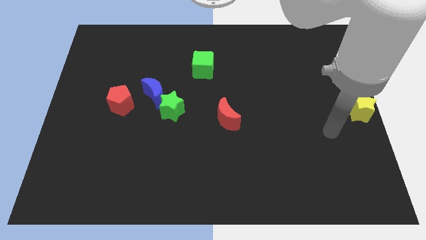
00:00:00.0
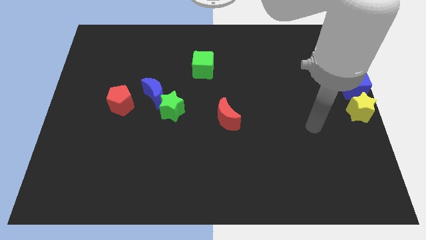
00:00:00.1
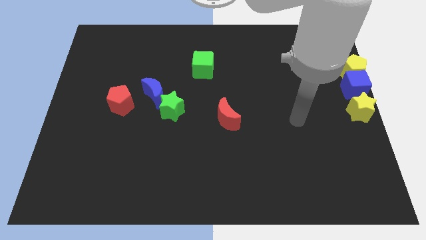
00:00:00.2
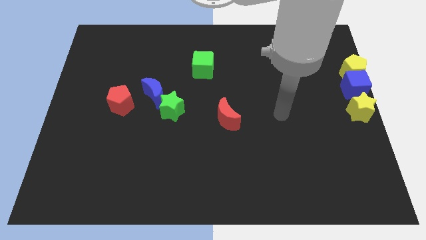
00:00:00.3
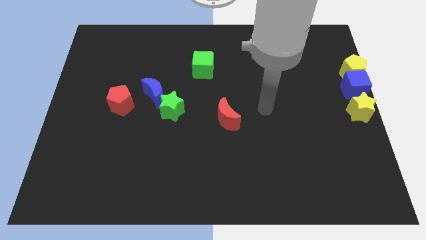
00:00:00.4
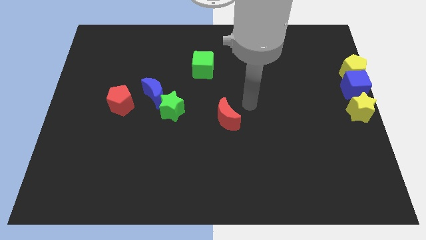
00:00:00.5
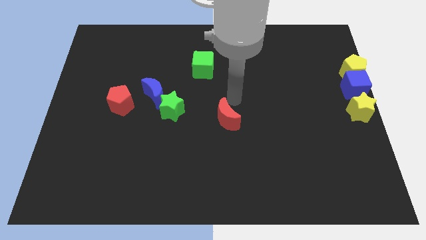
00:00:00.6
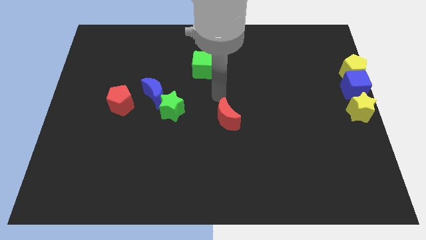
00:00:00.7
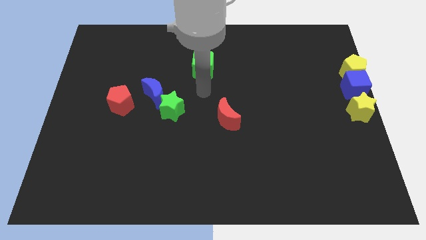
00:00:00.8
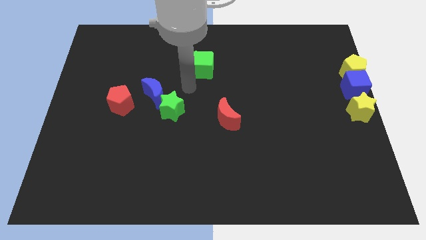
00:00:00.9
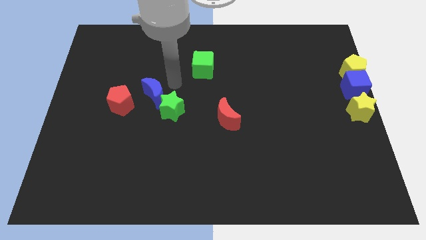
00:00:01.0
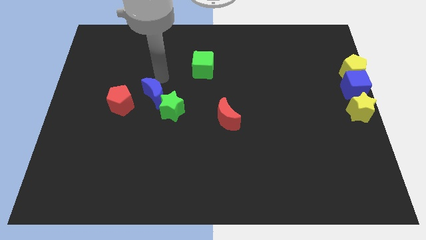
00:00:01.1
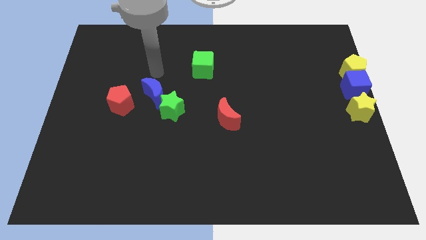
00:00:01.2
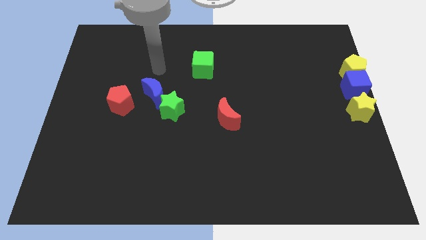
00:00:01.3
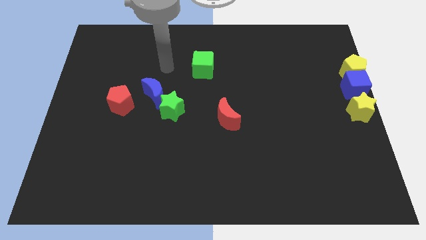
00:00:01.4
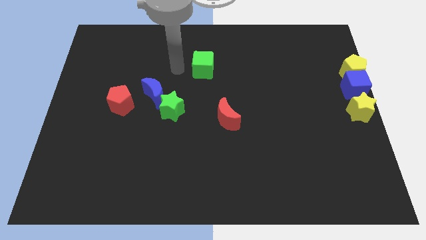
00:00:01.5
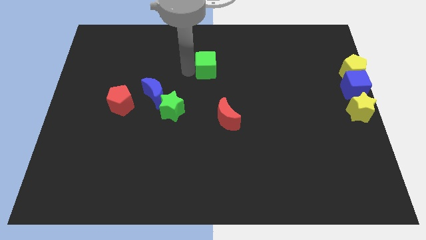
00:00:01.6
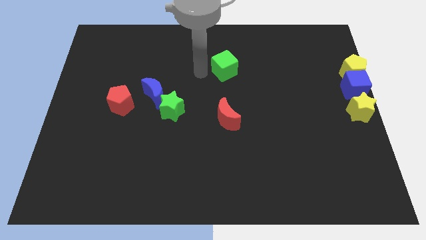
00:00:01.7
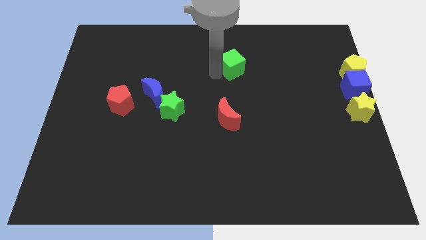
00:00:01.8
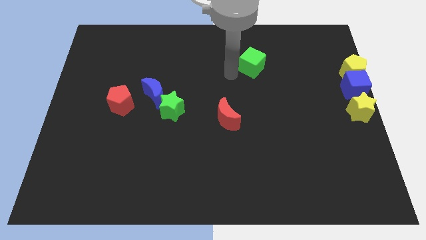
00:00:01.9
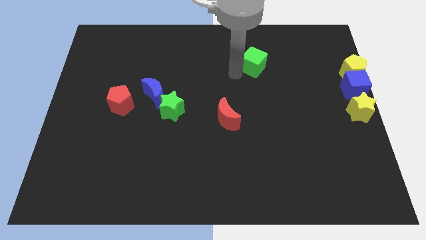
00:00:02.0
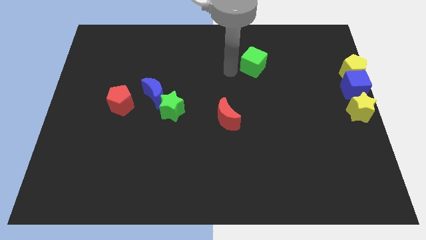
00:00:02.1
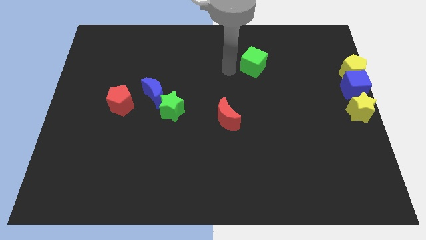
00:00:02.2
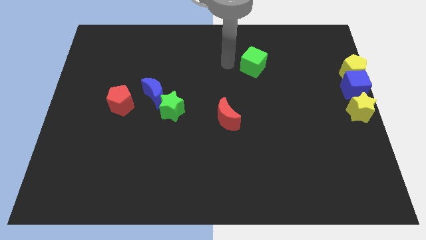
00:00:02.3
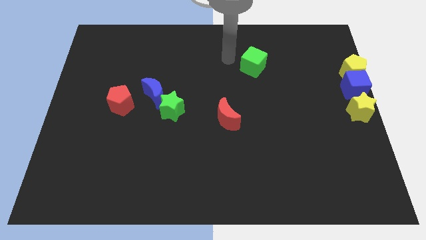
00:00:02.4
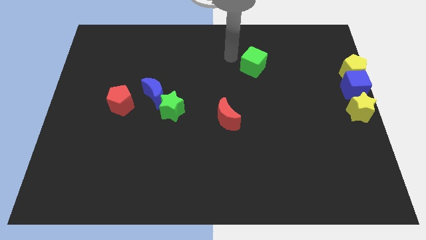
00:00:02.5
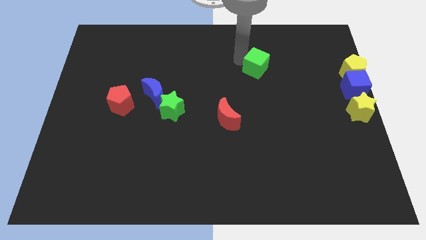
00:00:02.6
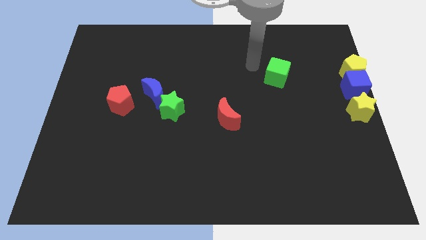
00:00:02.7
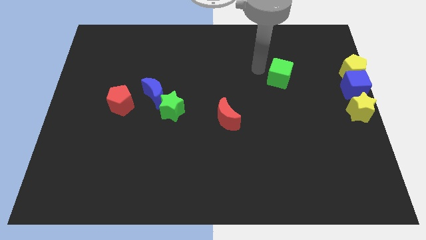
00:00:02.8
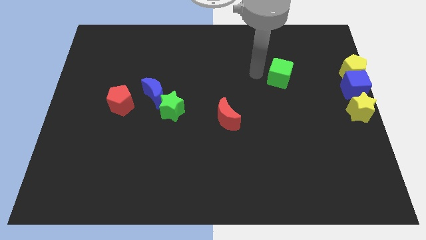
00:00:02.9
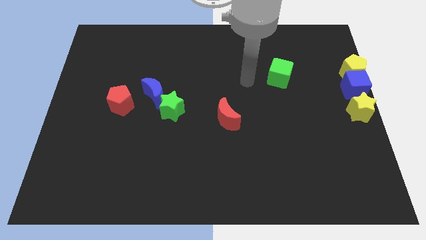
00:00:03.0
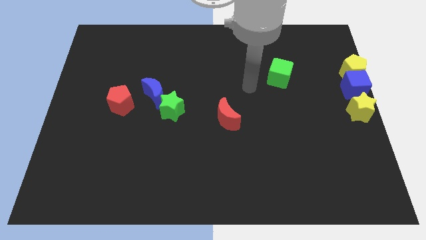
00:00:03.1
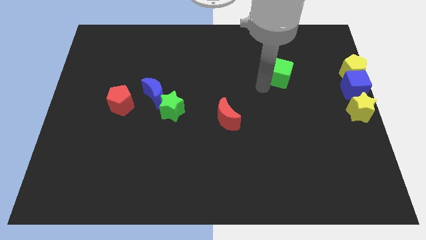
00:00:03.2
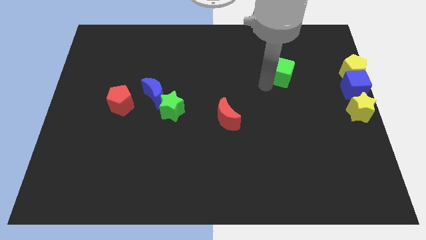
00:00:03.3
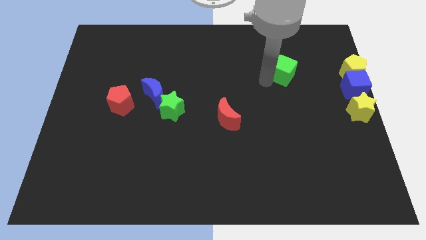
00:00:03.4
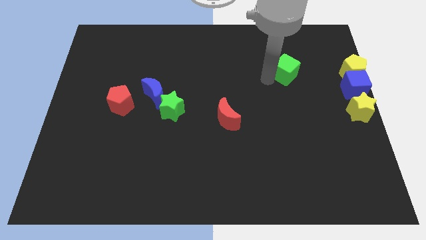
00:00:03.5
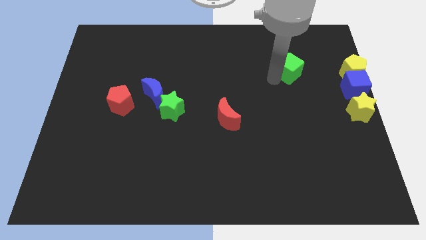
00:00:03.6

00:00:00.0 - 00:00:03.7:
push the green star to the right of the board

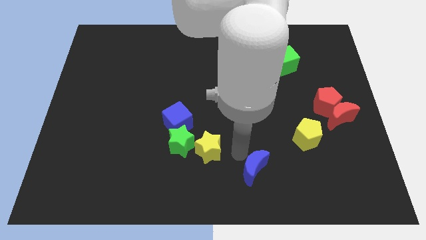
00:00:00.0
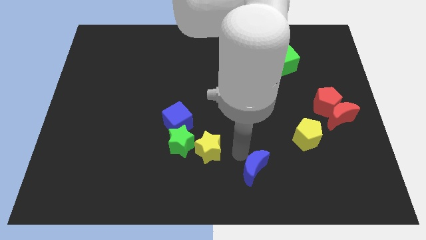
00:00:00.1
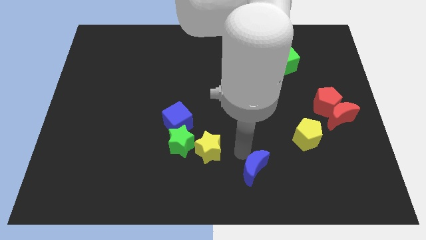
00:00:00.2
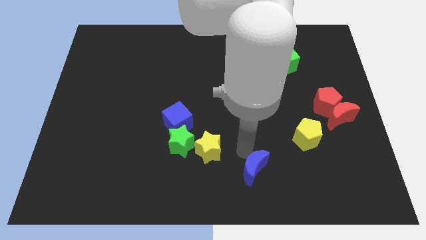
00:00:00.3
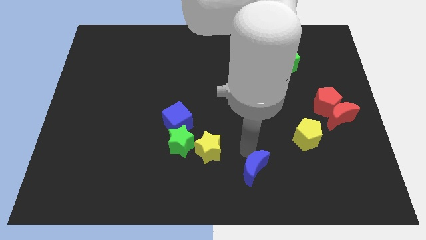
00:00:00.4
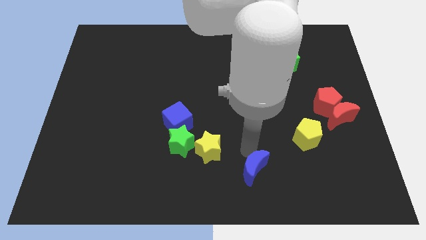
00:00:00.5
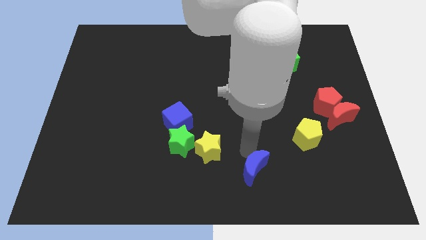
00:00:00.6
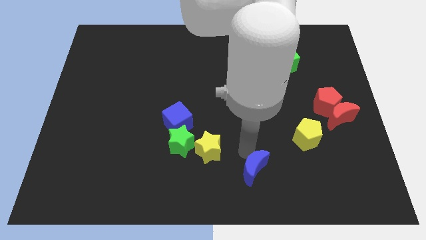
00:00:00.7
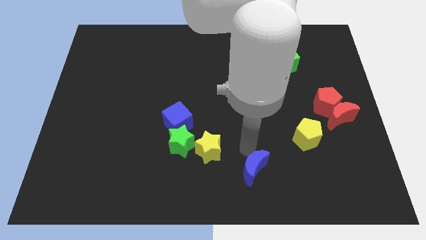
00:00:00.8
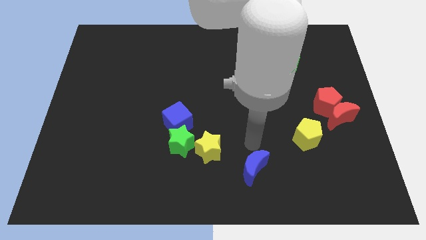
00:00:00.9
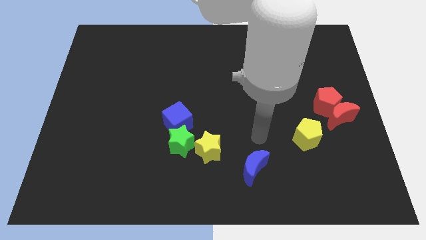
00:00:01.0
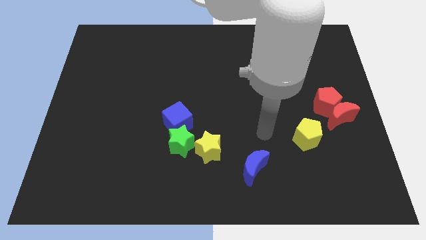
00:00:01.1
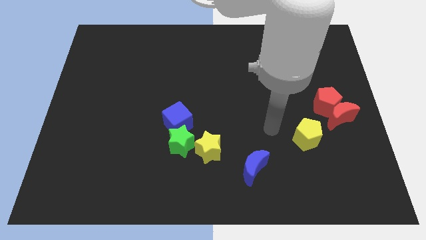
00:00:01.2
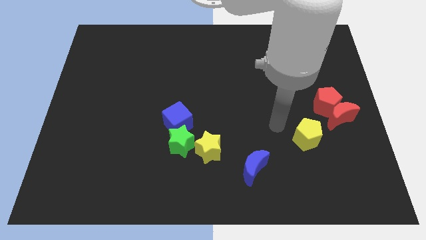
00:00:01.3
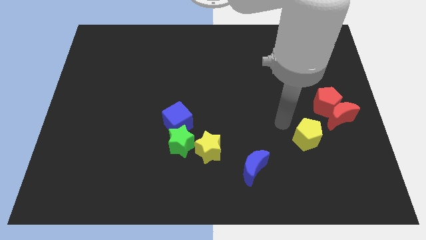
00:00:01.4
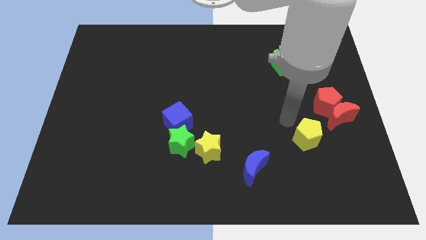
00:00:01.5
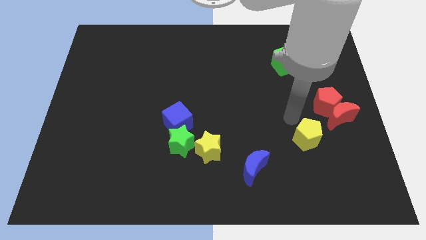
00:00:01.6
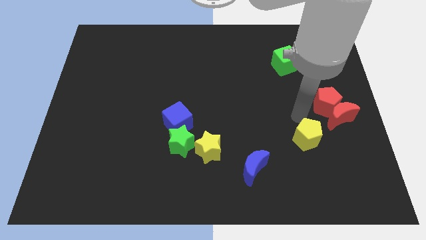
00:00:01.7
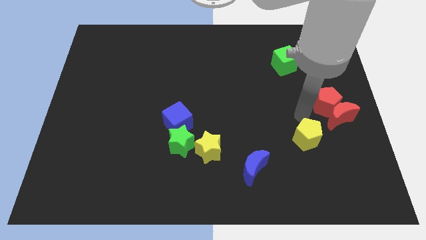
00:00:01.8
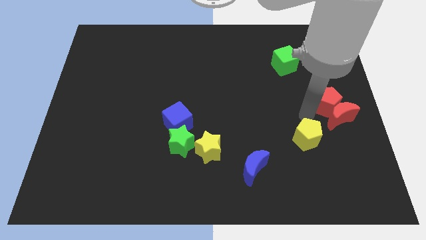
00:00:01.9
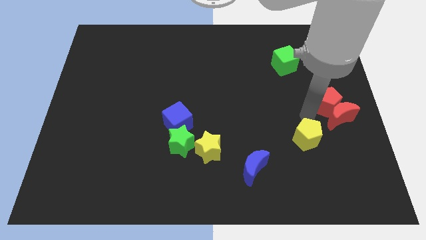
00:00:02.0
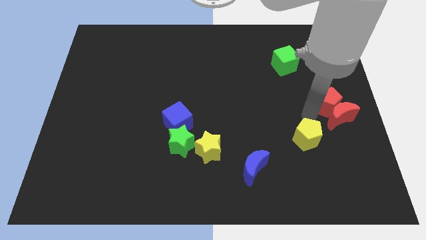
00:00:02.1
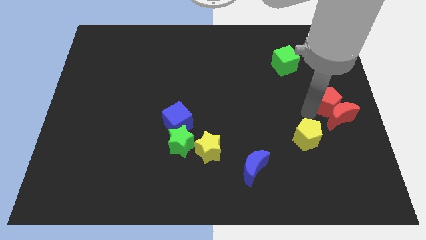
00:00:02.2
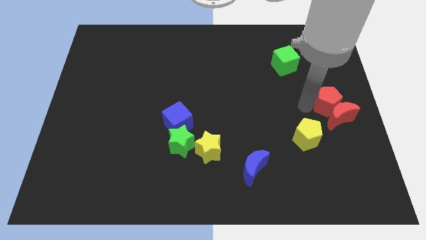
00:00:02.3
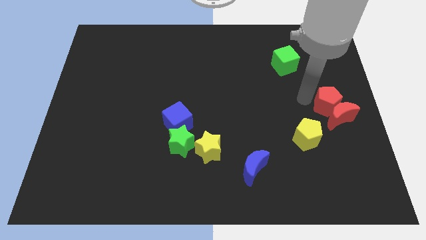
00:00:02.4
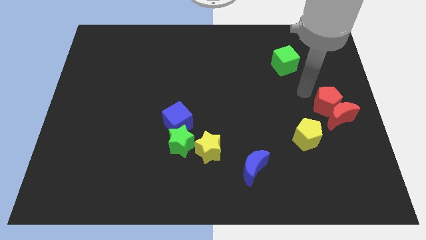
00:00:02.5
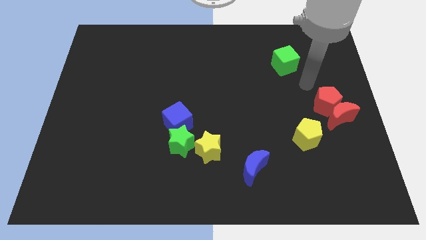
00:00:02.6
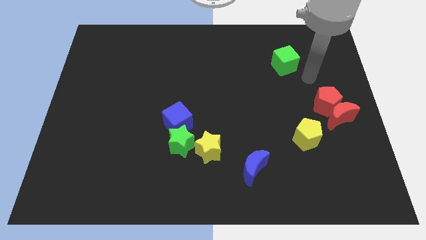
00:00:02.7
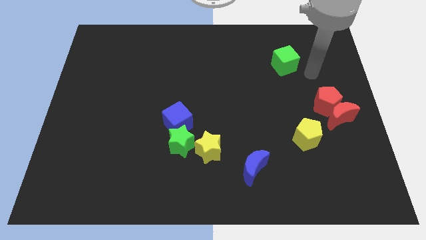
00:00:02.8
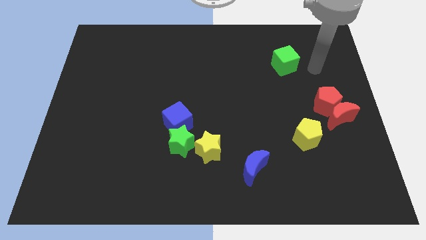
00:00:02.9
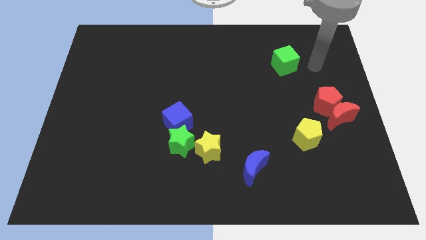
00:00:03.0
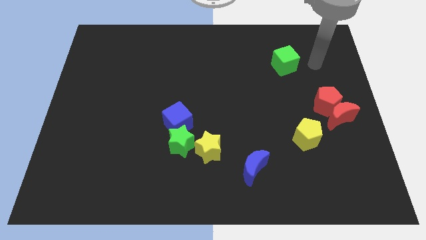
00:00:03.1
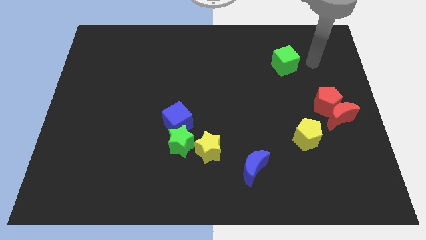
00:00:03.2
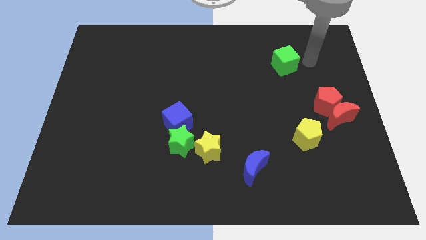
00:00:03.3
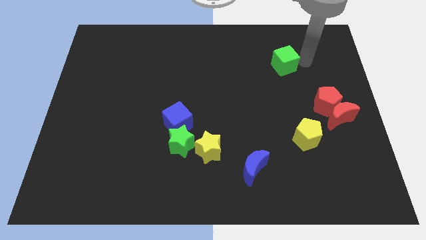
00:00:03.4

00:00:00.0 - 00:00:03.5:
move your arm to the top right of the board

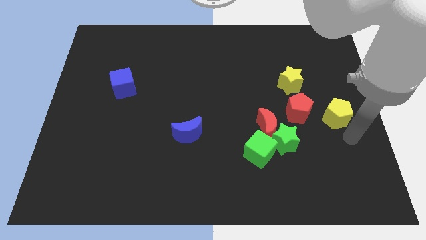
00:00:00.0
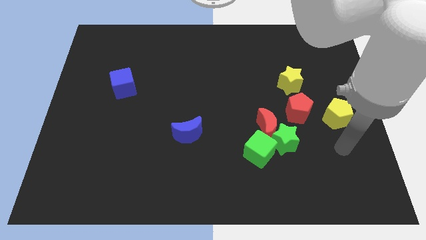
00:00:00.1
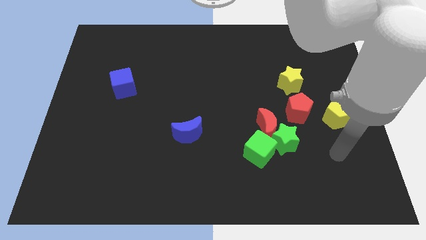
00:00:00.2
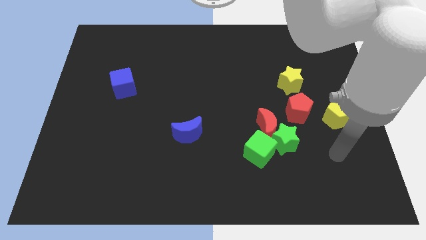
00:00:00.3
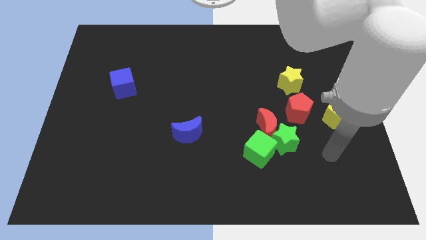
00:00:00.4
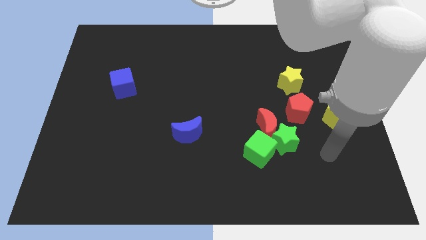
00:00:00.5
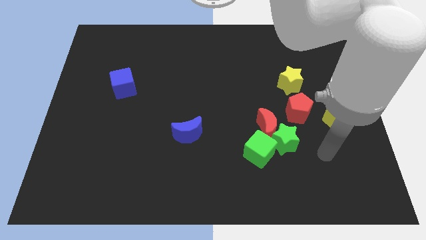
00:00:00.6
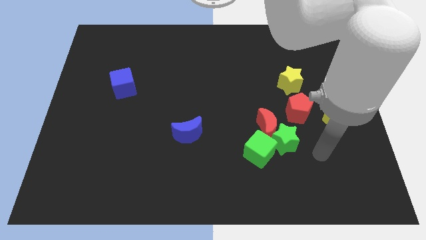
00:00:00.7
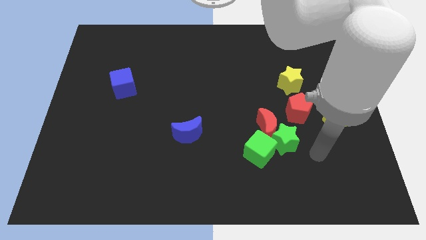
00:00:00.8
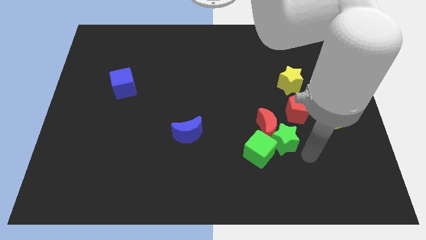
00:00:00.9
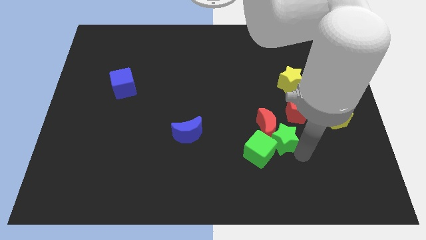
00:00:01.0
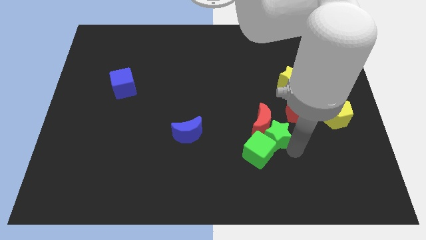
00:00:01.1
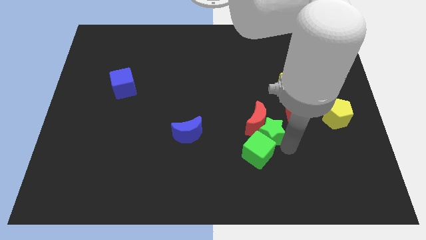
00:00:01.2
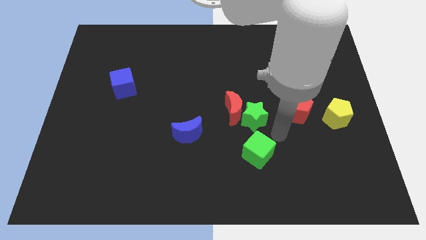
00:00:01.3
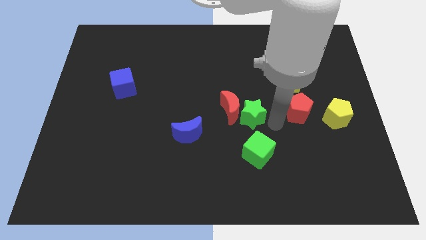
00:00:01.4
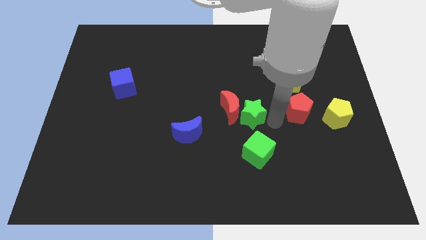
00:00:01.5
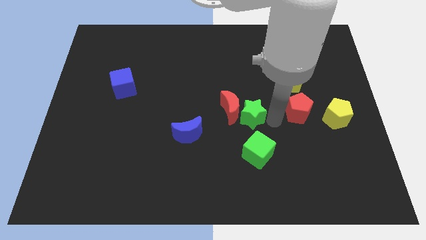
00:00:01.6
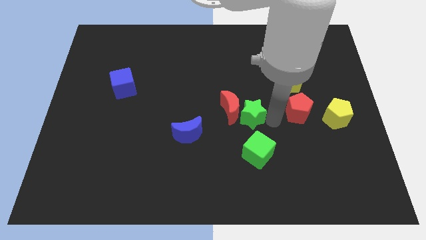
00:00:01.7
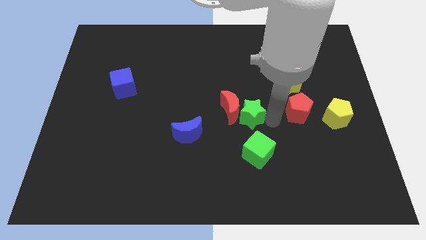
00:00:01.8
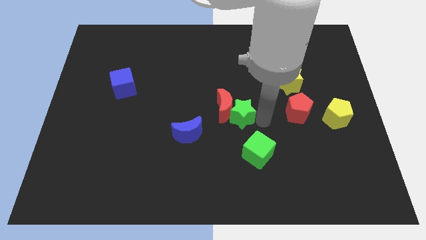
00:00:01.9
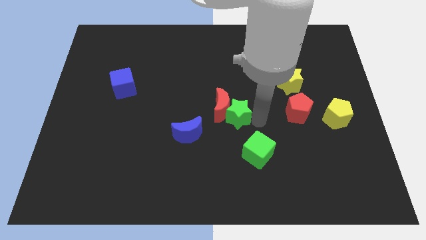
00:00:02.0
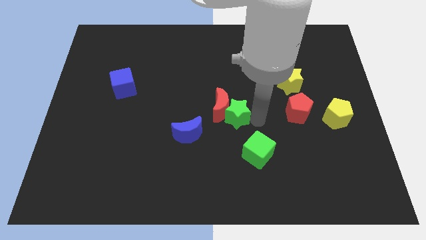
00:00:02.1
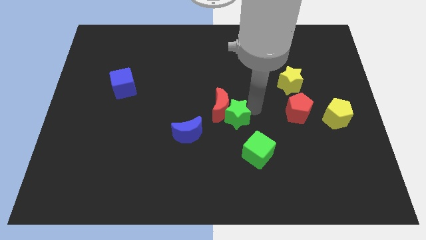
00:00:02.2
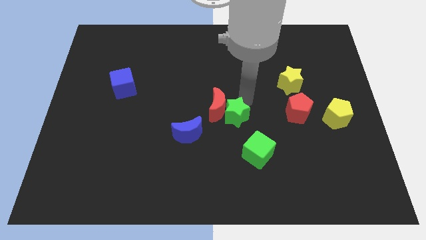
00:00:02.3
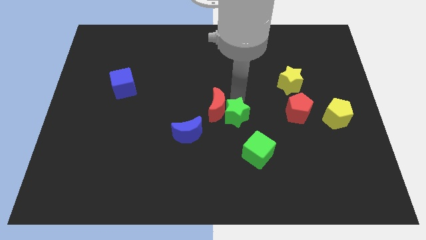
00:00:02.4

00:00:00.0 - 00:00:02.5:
slightly push up the red moon with a green star
